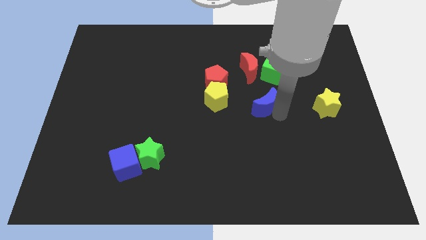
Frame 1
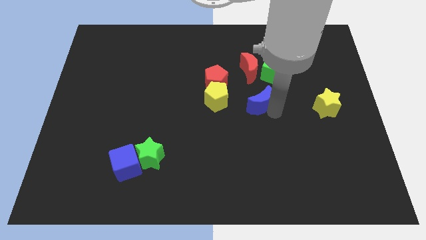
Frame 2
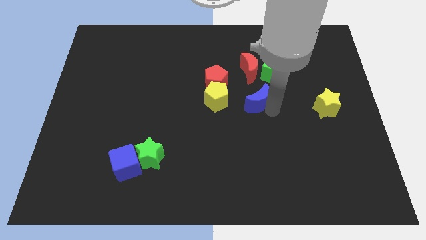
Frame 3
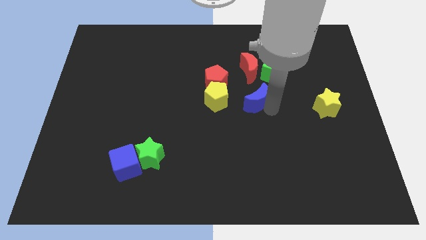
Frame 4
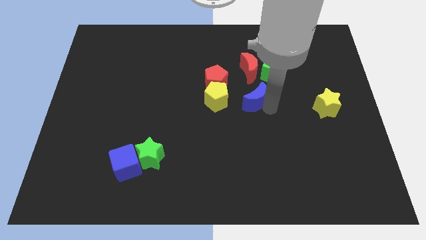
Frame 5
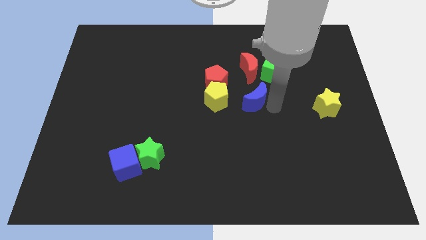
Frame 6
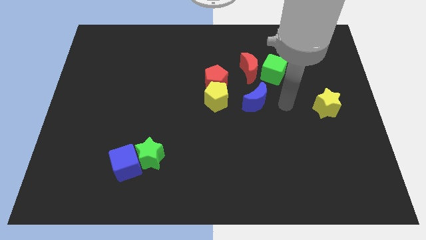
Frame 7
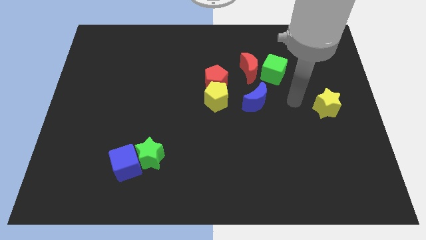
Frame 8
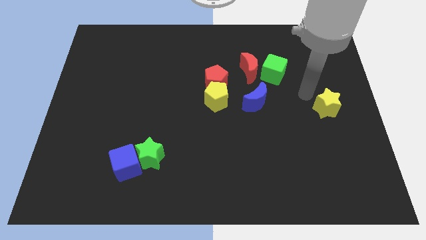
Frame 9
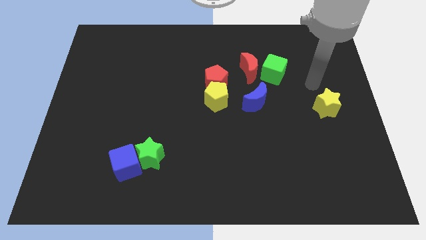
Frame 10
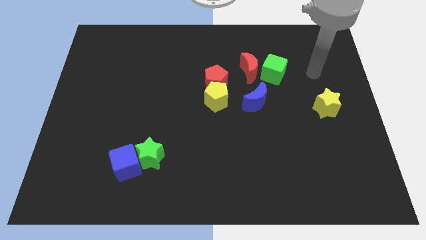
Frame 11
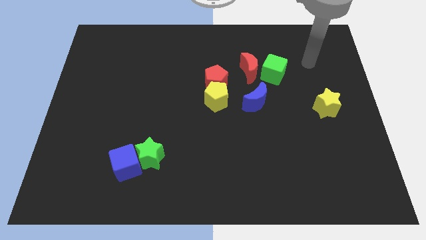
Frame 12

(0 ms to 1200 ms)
push the blue moon closer to the right of the yellow pentagon

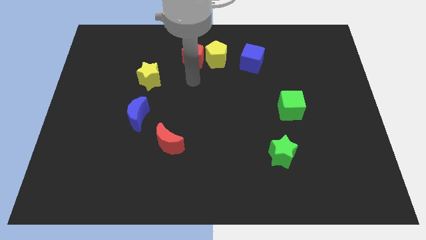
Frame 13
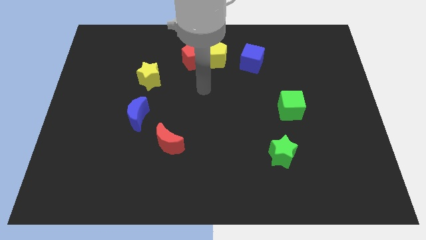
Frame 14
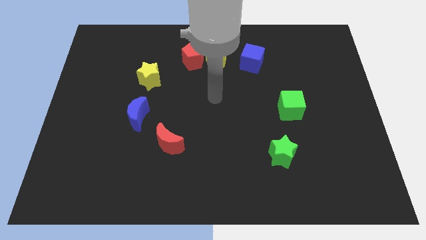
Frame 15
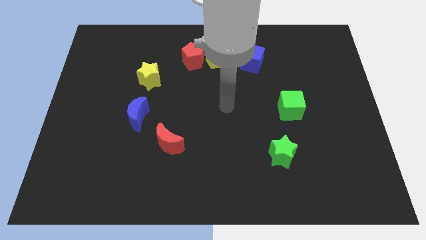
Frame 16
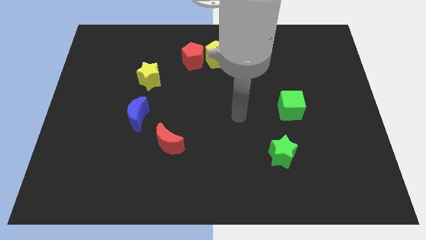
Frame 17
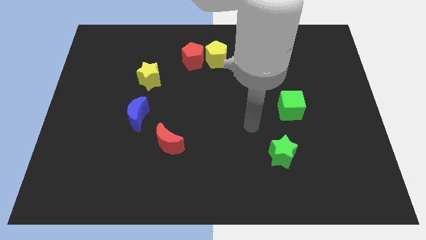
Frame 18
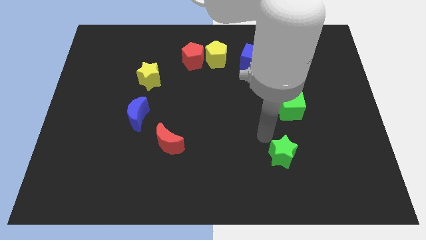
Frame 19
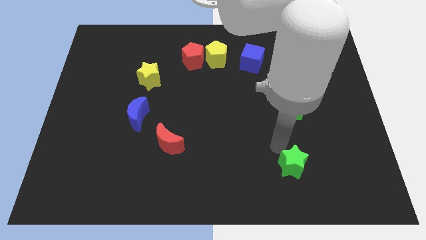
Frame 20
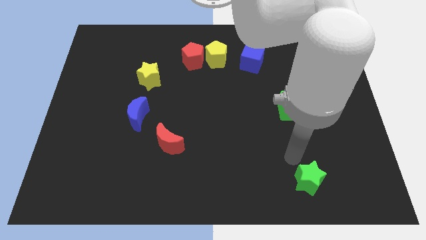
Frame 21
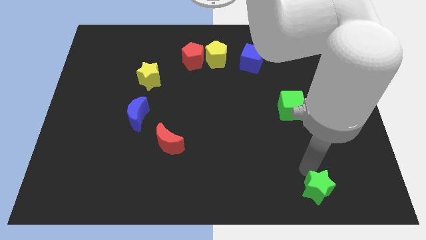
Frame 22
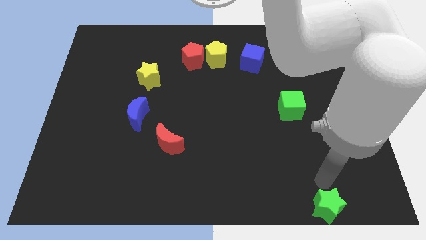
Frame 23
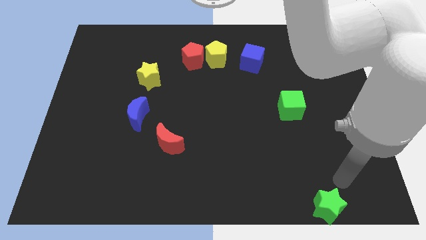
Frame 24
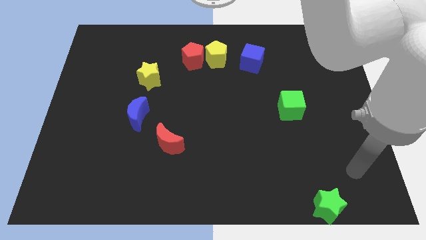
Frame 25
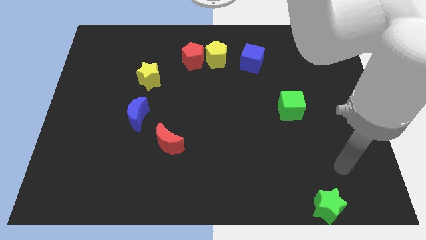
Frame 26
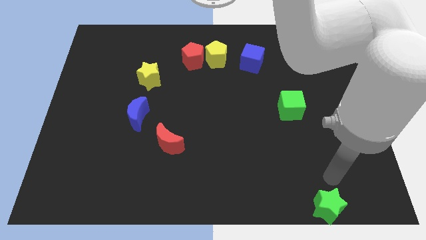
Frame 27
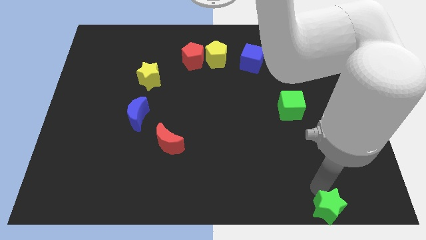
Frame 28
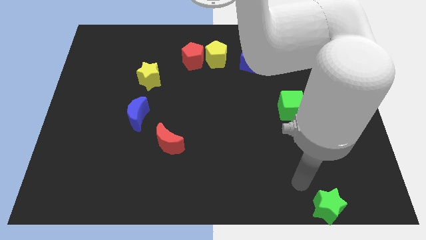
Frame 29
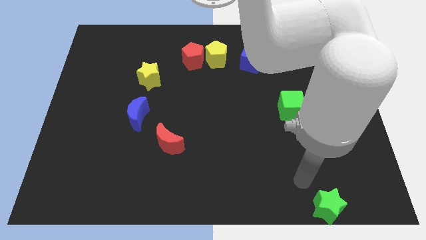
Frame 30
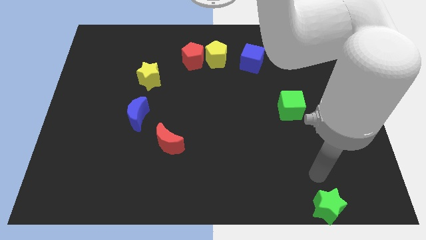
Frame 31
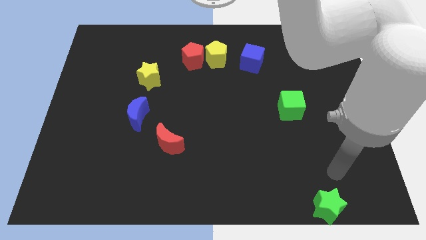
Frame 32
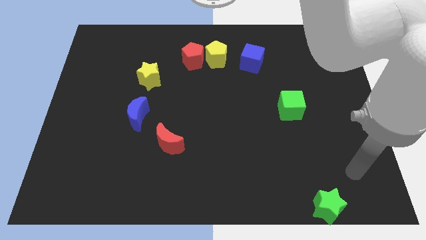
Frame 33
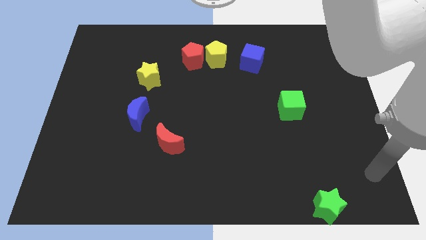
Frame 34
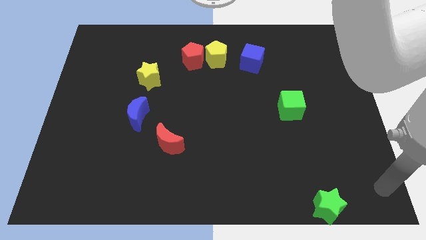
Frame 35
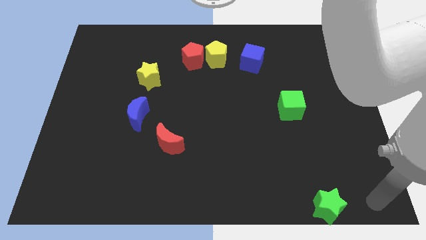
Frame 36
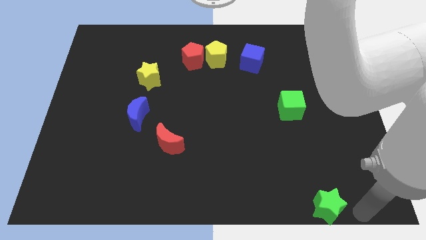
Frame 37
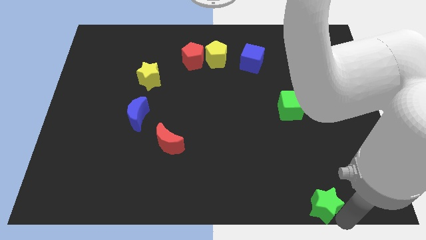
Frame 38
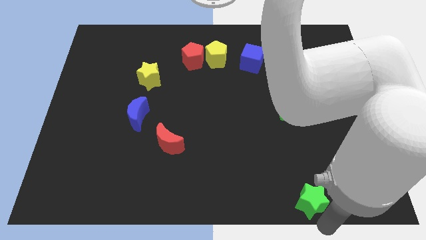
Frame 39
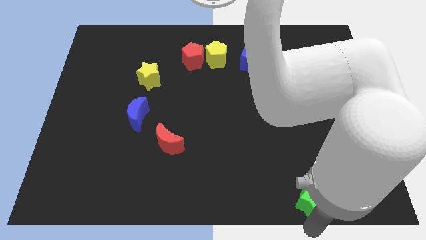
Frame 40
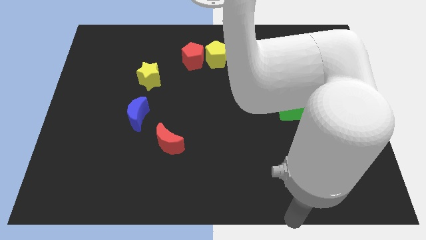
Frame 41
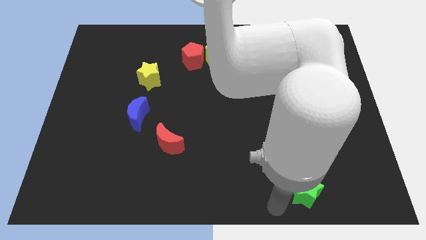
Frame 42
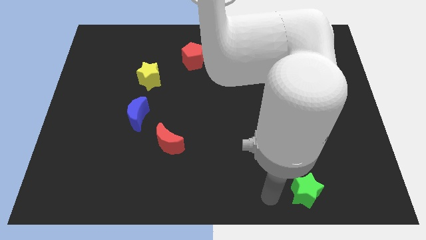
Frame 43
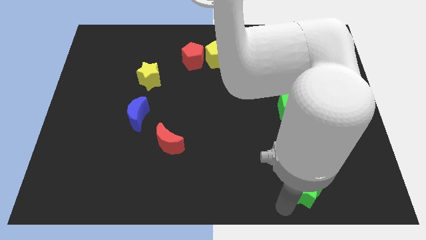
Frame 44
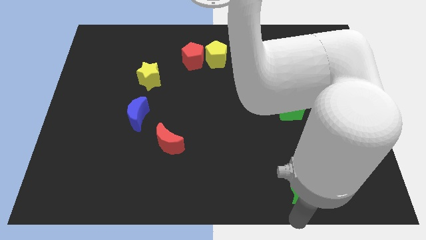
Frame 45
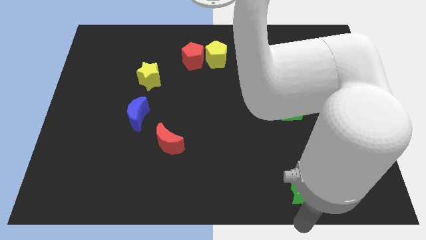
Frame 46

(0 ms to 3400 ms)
place the green star diagonally to red moon

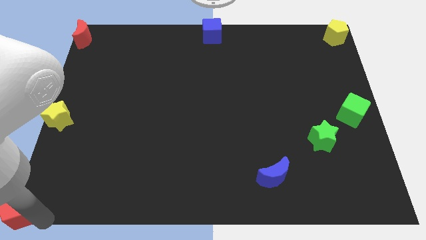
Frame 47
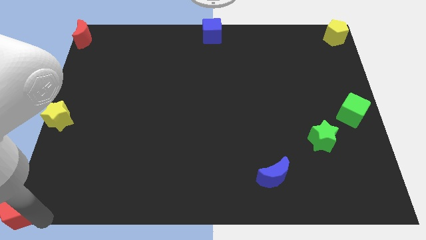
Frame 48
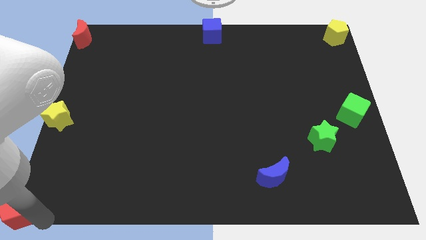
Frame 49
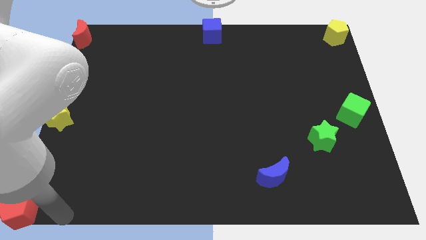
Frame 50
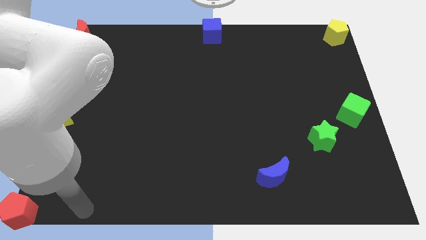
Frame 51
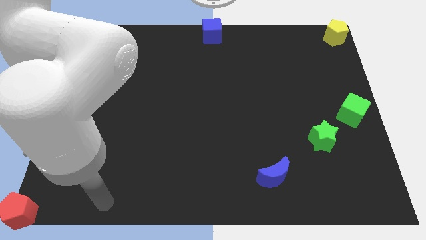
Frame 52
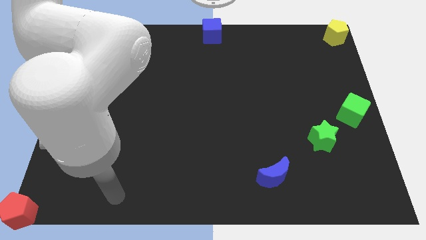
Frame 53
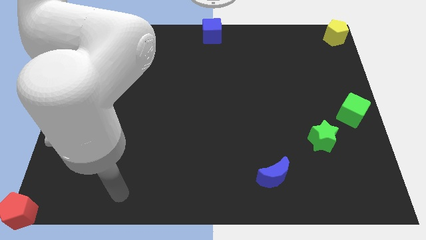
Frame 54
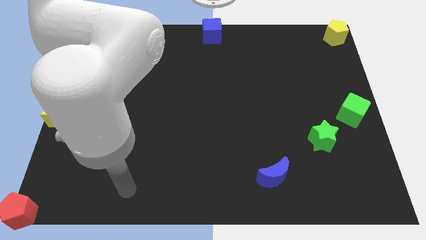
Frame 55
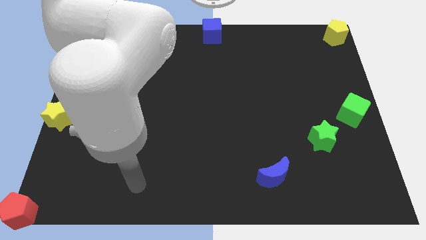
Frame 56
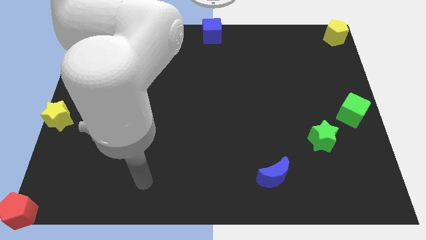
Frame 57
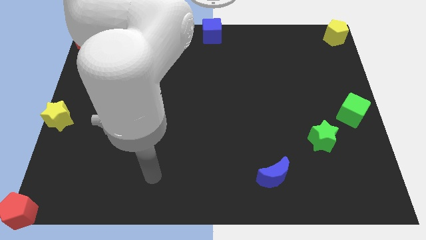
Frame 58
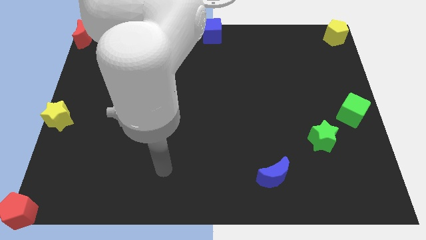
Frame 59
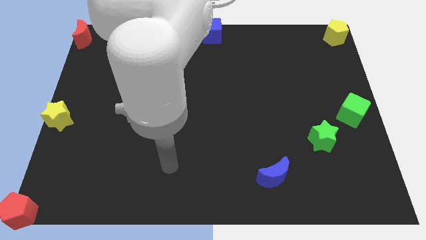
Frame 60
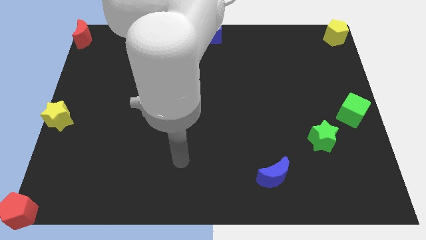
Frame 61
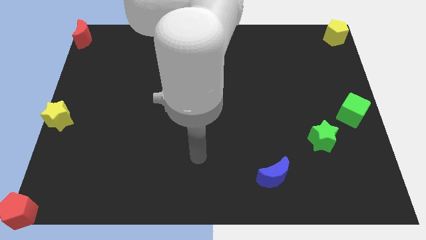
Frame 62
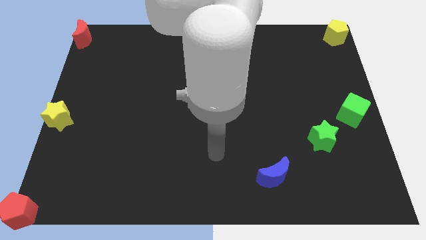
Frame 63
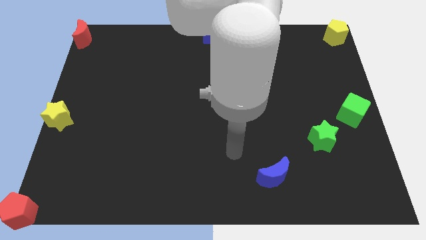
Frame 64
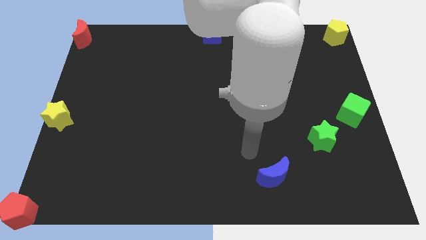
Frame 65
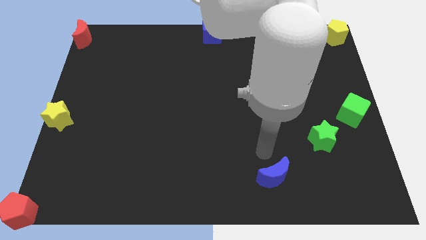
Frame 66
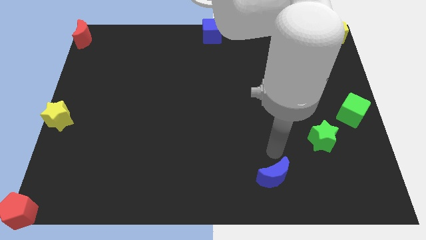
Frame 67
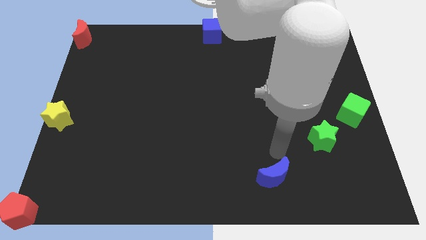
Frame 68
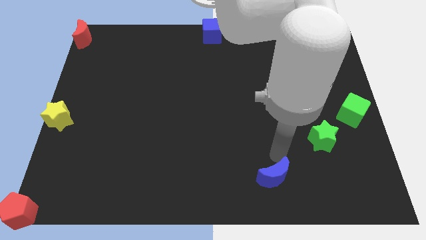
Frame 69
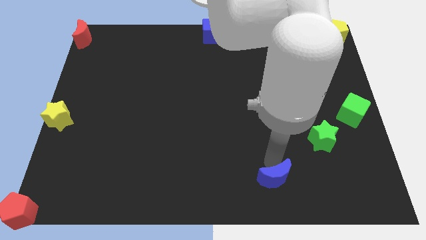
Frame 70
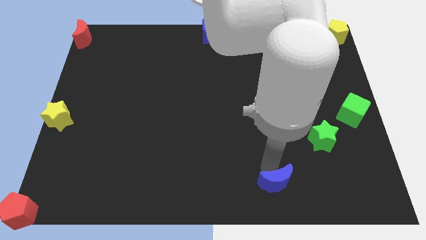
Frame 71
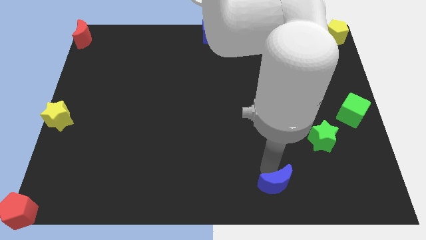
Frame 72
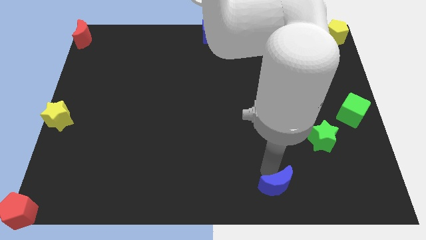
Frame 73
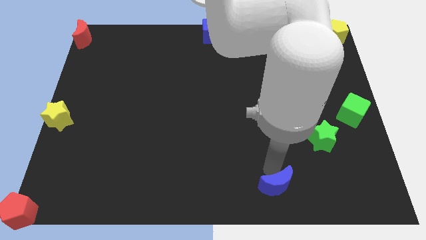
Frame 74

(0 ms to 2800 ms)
move the arm away from the red pentagon

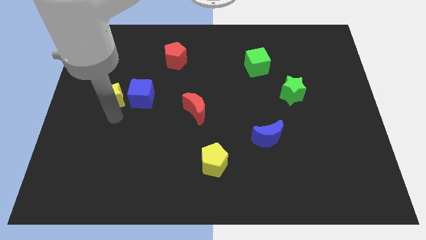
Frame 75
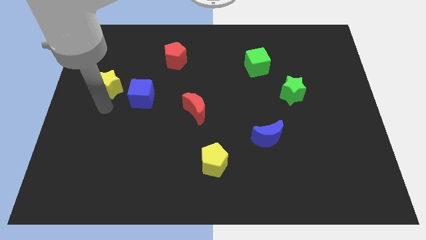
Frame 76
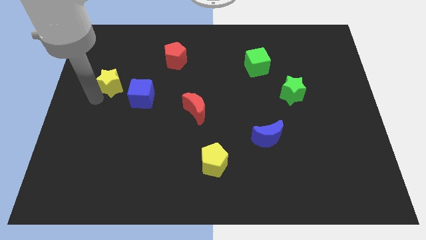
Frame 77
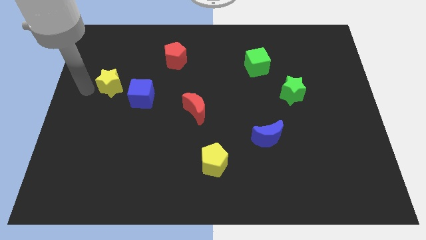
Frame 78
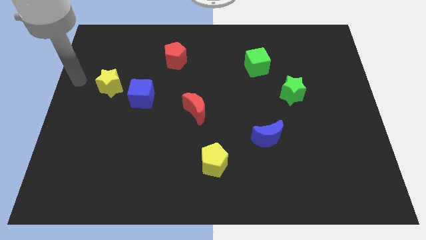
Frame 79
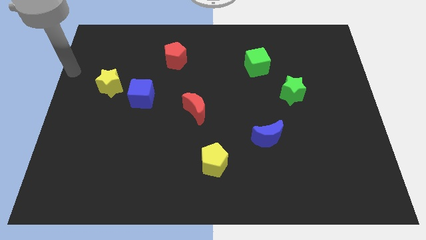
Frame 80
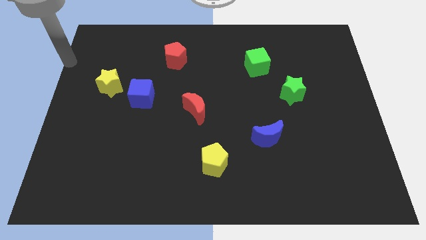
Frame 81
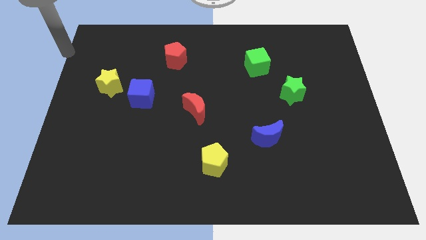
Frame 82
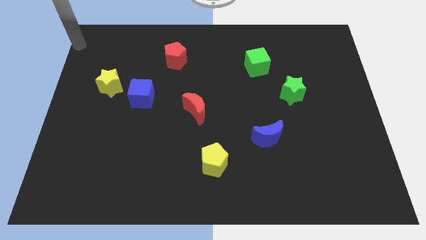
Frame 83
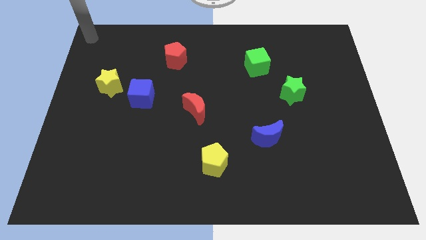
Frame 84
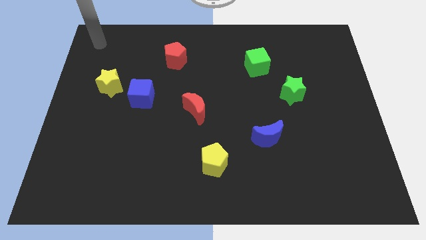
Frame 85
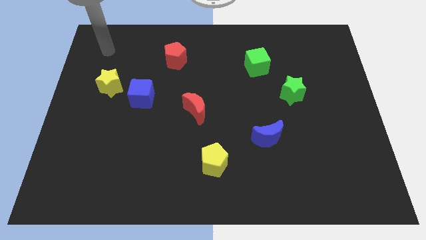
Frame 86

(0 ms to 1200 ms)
move the yellow star slightly up

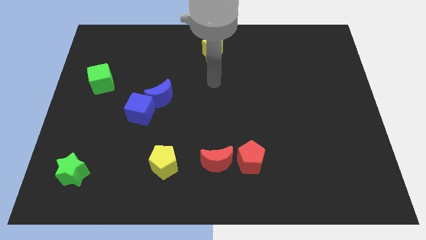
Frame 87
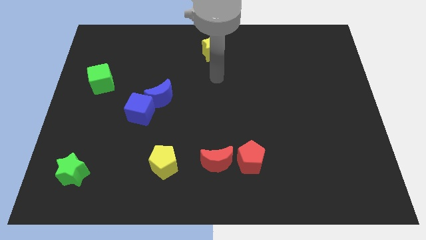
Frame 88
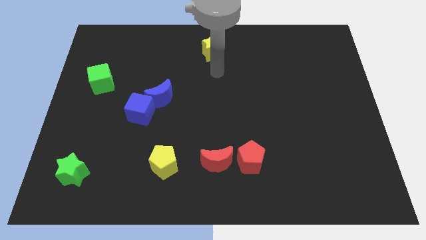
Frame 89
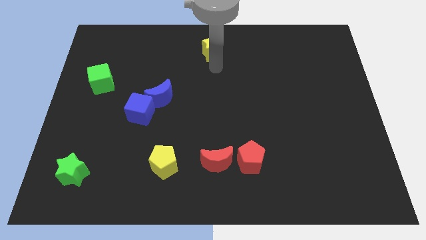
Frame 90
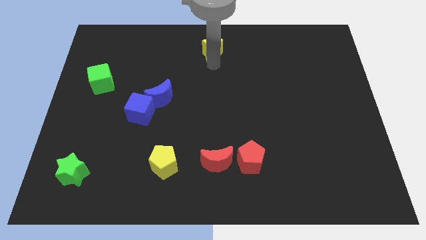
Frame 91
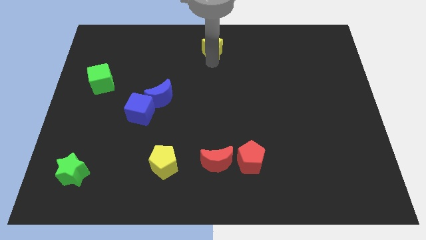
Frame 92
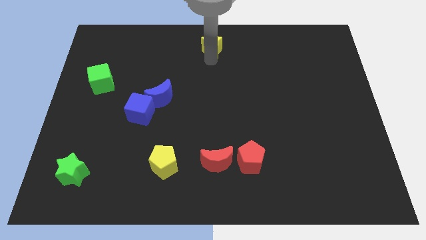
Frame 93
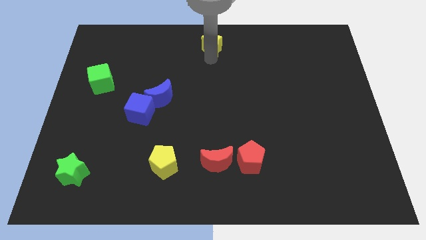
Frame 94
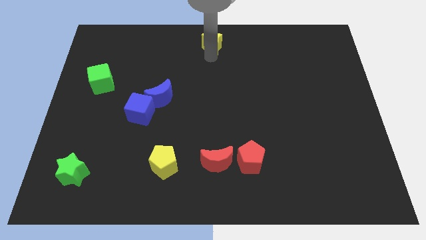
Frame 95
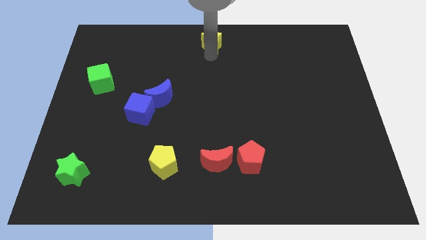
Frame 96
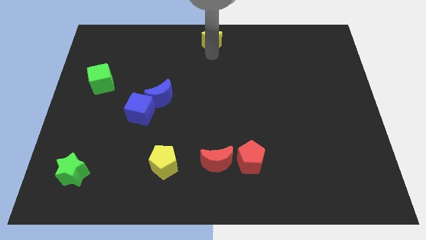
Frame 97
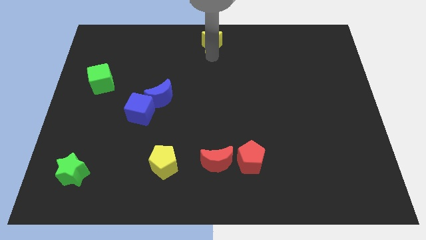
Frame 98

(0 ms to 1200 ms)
push the yellow star slightly towards up
